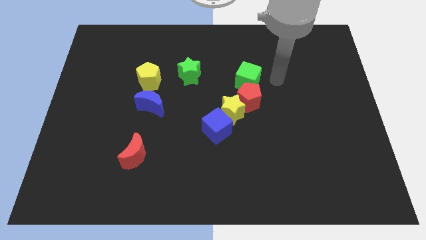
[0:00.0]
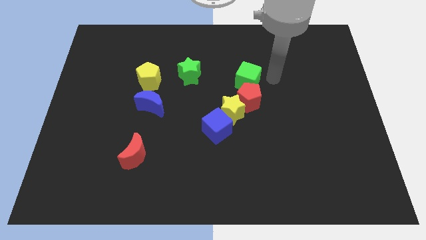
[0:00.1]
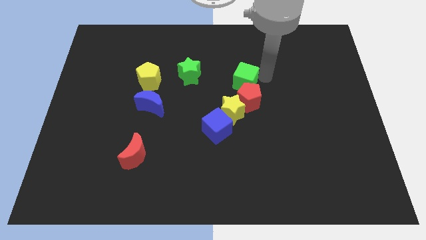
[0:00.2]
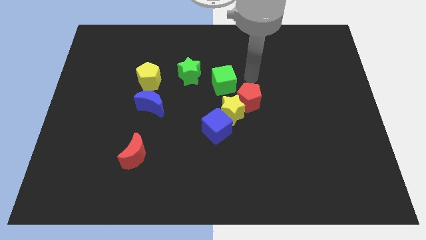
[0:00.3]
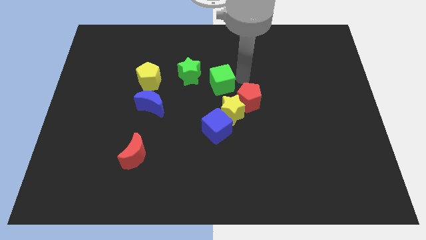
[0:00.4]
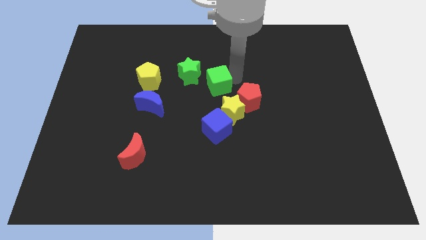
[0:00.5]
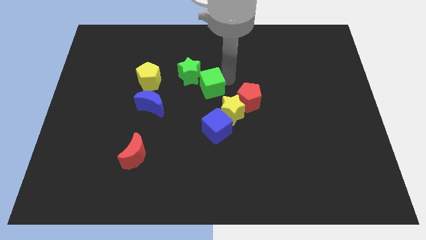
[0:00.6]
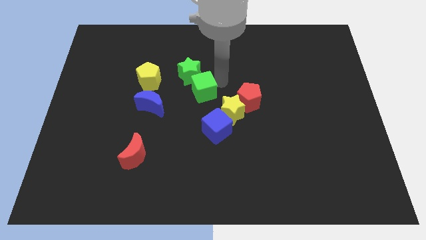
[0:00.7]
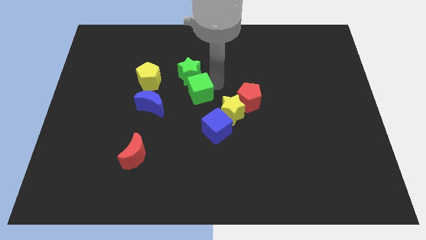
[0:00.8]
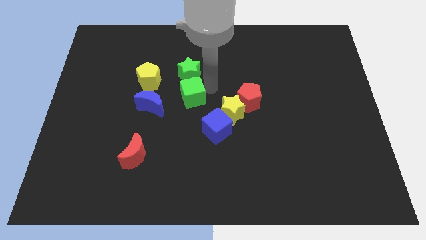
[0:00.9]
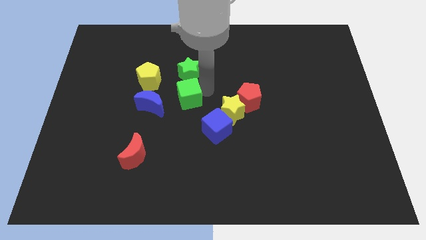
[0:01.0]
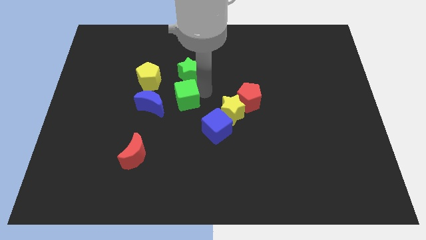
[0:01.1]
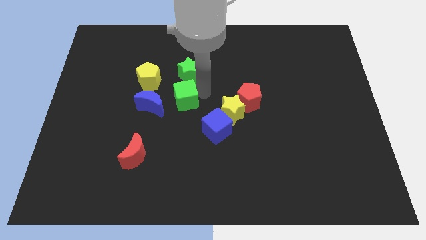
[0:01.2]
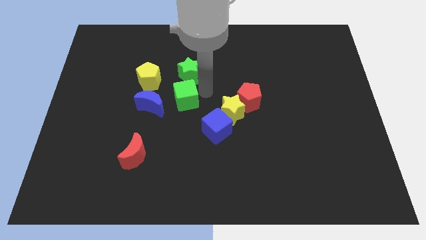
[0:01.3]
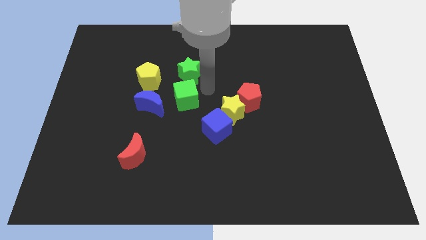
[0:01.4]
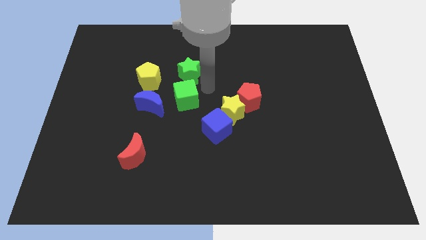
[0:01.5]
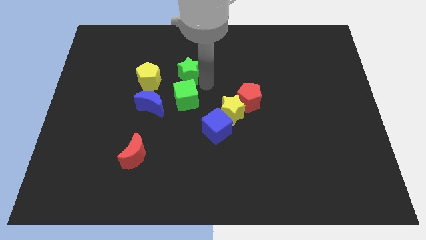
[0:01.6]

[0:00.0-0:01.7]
move the green cube below the green star

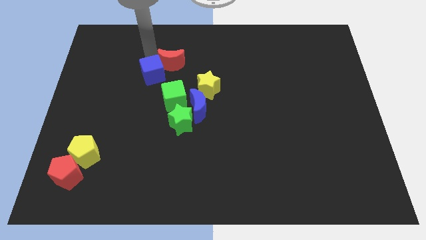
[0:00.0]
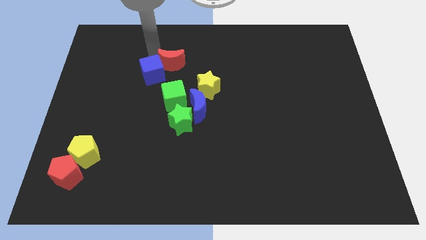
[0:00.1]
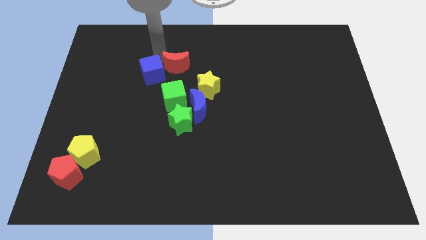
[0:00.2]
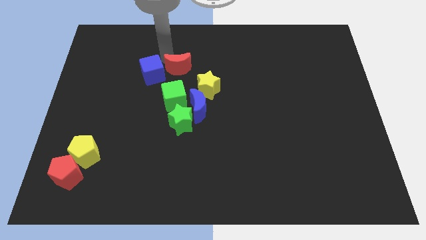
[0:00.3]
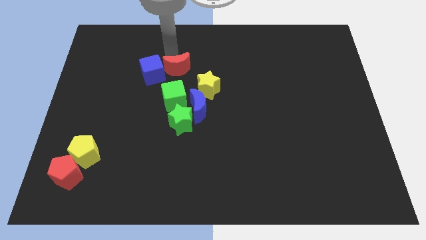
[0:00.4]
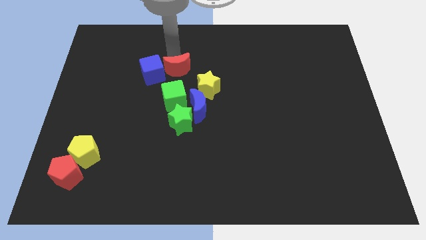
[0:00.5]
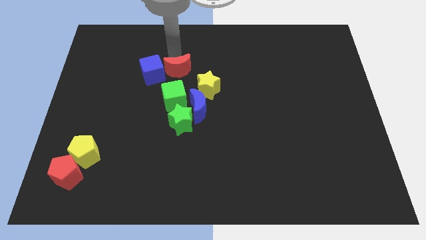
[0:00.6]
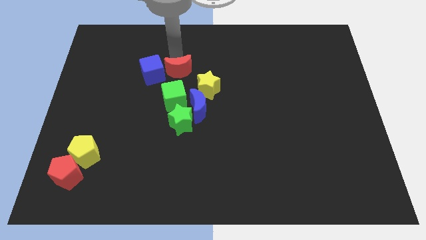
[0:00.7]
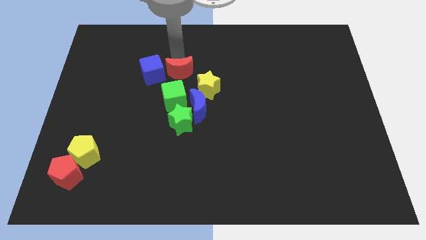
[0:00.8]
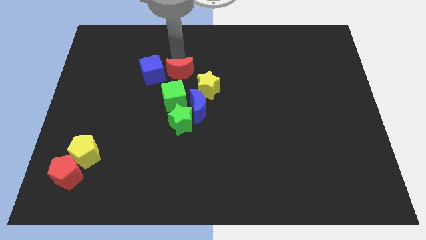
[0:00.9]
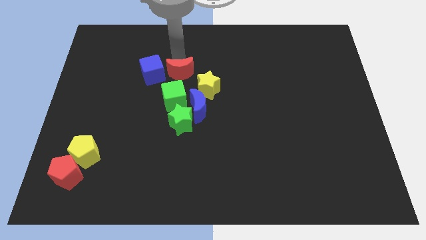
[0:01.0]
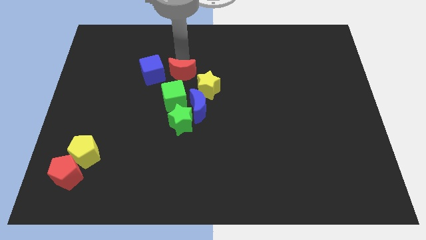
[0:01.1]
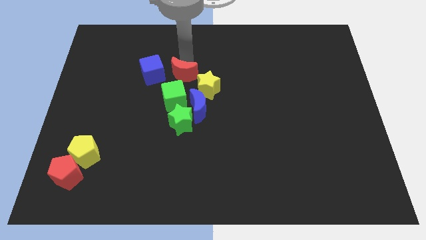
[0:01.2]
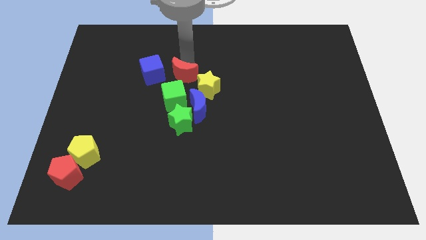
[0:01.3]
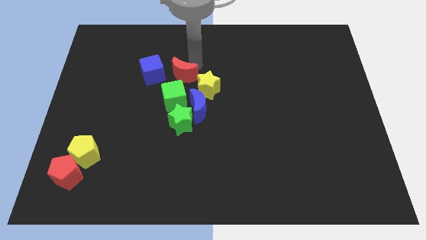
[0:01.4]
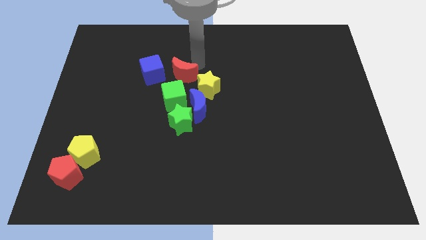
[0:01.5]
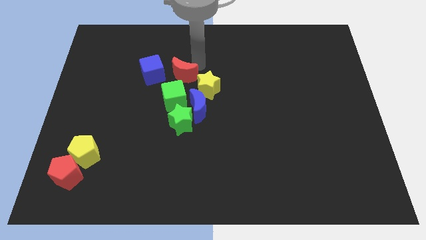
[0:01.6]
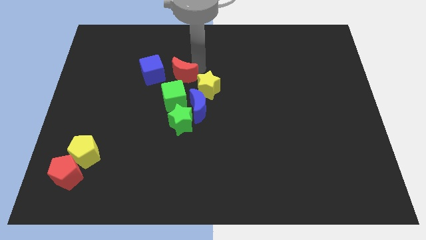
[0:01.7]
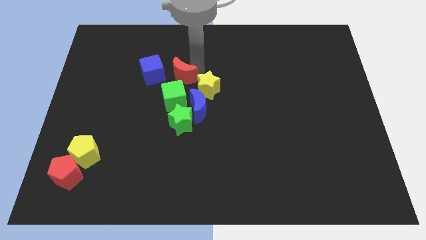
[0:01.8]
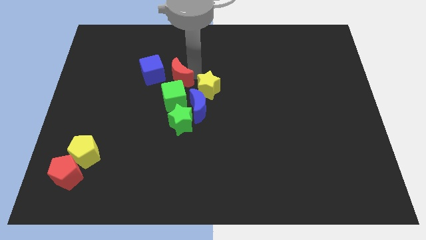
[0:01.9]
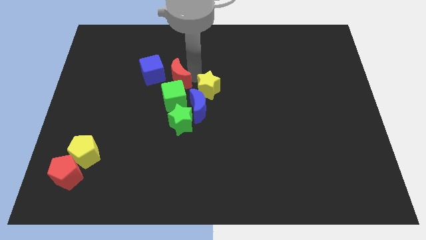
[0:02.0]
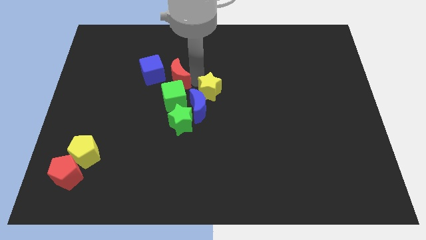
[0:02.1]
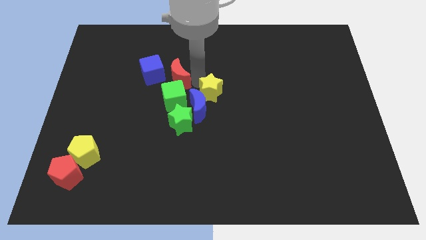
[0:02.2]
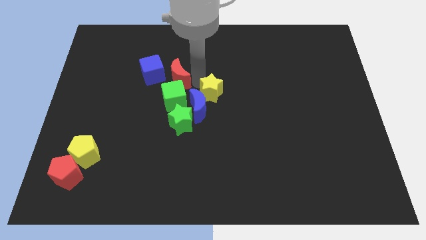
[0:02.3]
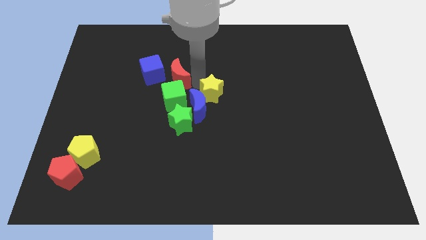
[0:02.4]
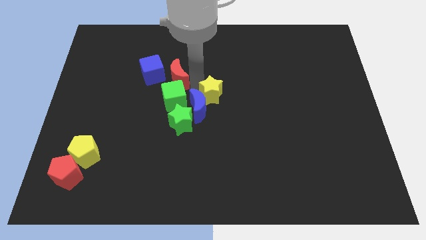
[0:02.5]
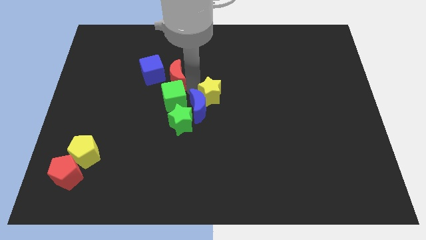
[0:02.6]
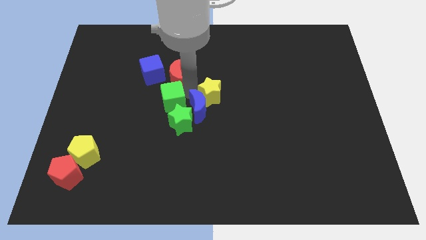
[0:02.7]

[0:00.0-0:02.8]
place your arm in between the group of blocks

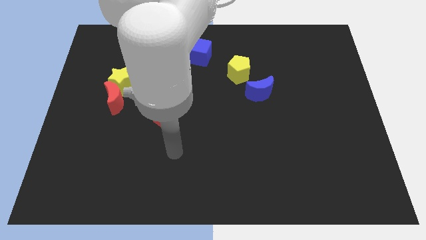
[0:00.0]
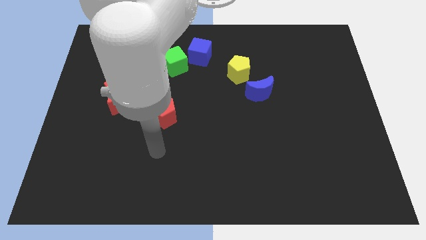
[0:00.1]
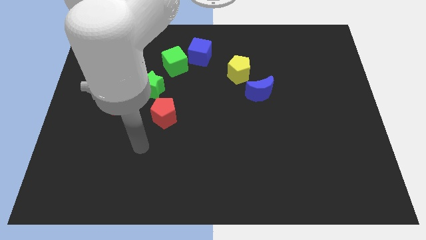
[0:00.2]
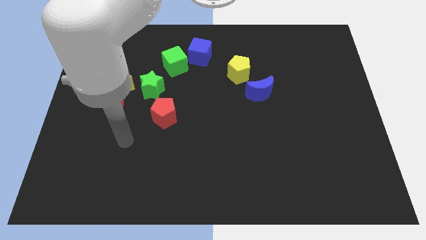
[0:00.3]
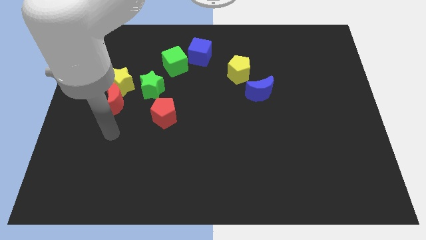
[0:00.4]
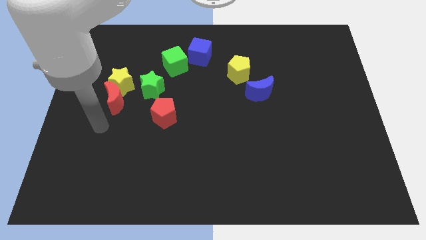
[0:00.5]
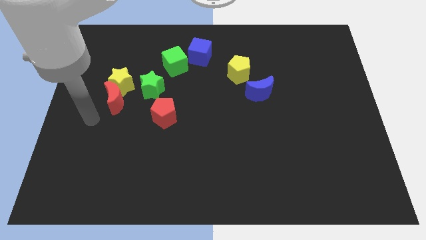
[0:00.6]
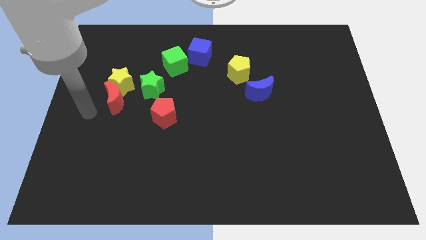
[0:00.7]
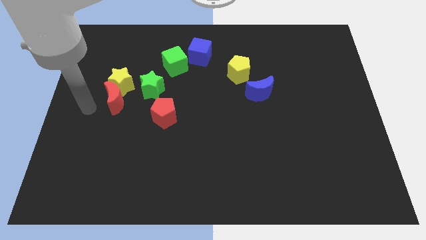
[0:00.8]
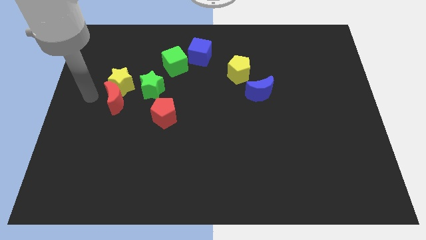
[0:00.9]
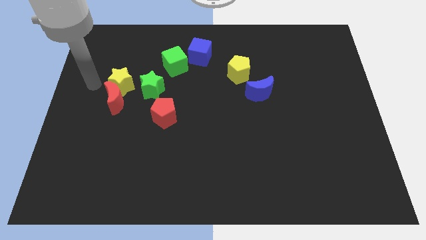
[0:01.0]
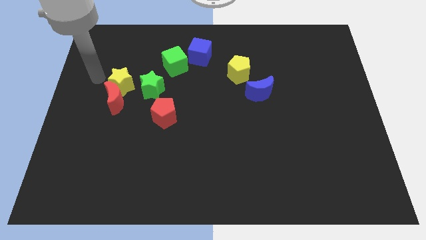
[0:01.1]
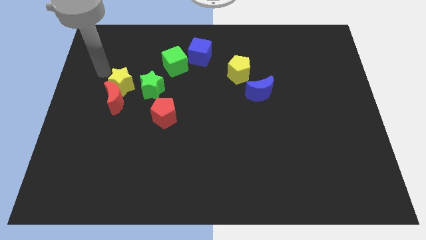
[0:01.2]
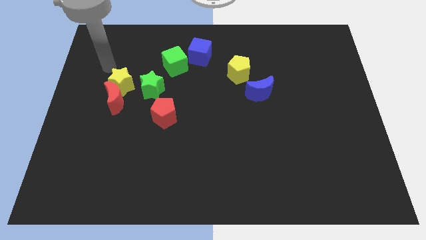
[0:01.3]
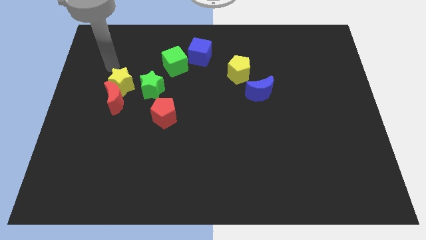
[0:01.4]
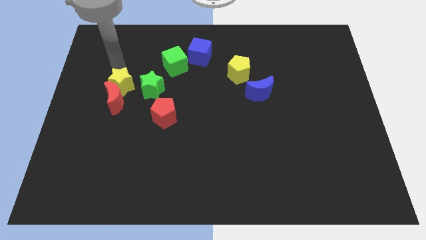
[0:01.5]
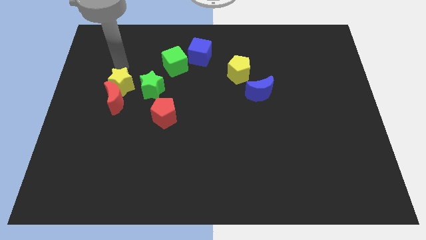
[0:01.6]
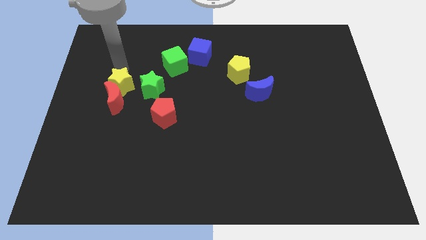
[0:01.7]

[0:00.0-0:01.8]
place the arm above the yellow star

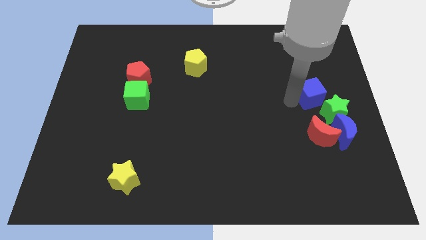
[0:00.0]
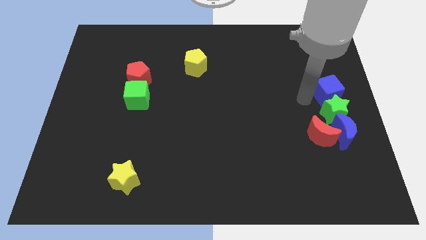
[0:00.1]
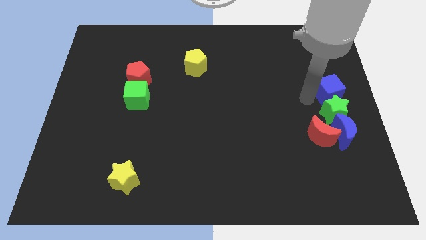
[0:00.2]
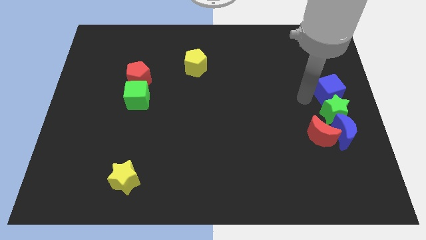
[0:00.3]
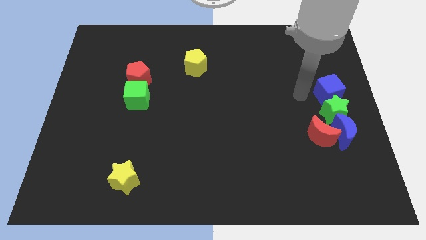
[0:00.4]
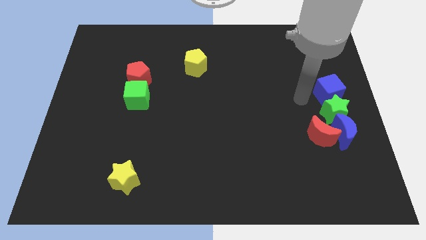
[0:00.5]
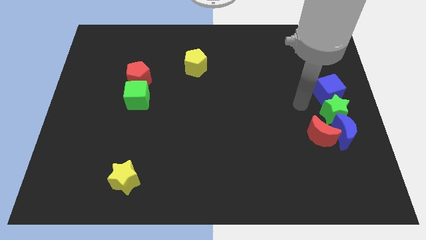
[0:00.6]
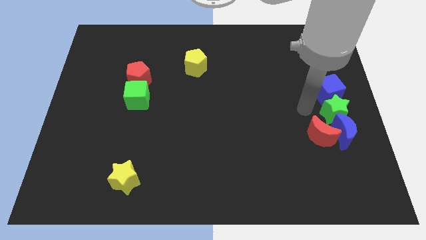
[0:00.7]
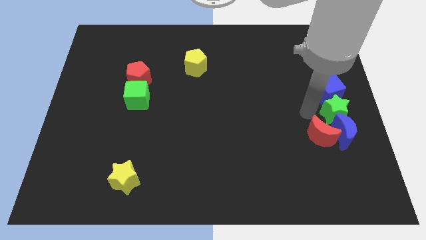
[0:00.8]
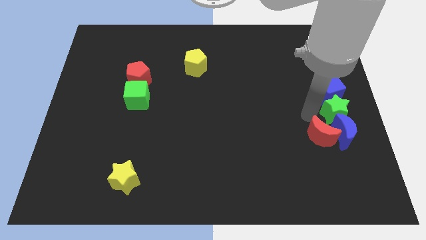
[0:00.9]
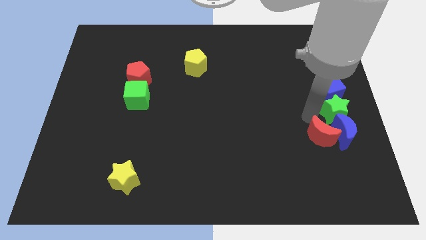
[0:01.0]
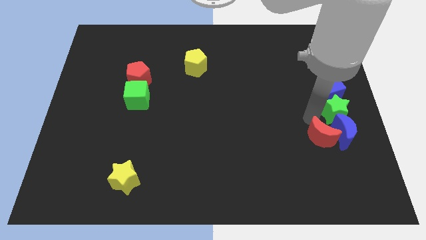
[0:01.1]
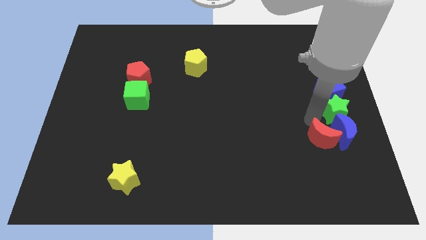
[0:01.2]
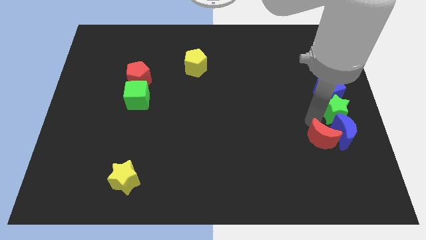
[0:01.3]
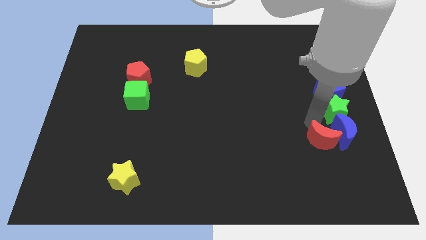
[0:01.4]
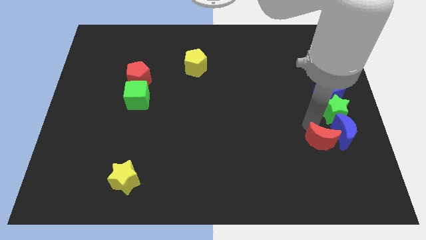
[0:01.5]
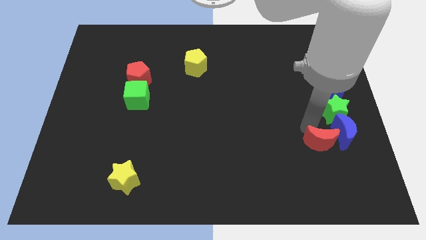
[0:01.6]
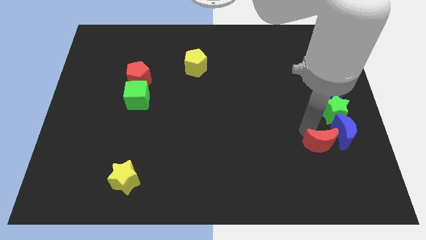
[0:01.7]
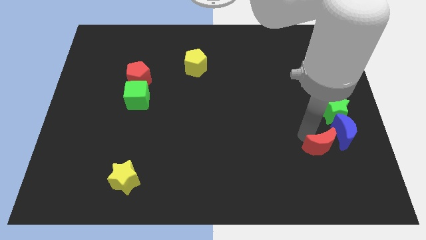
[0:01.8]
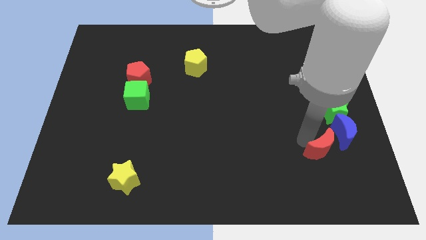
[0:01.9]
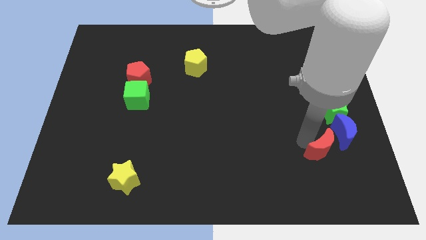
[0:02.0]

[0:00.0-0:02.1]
push red moon slightly downwards

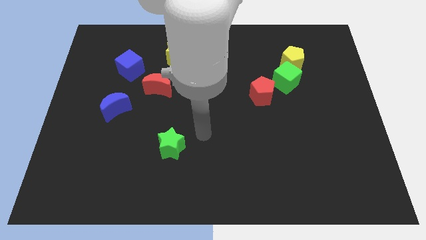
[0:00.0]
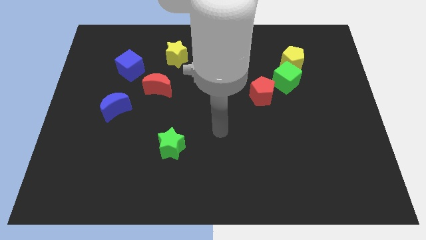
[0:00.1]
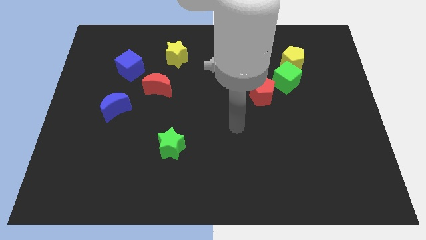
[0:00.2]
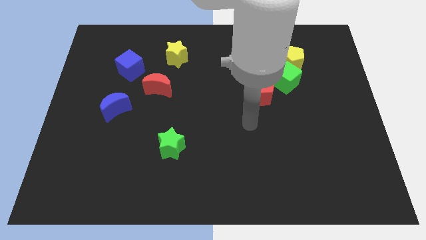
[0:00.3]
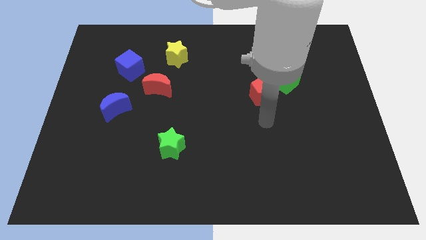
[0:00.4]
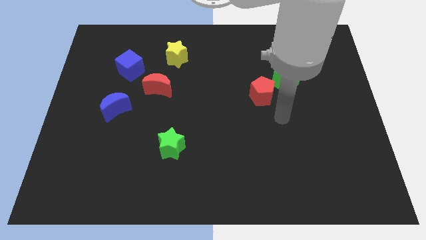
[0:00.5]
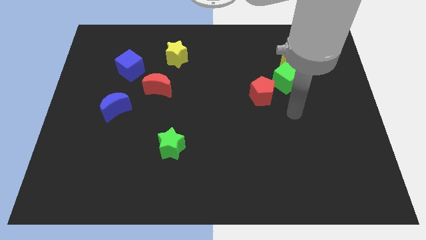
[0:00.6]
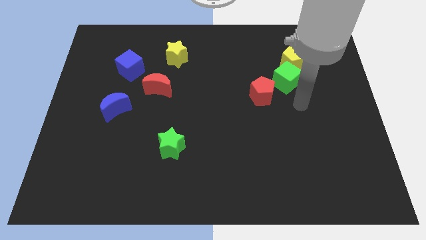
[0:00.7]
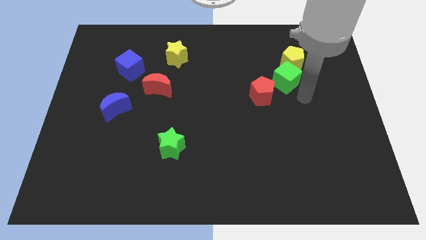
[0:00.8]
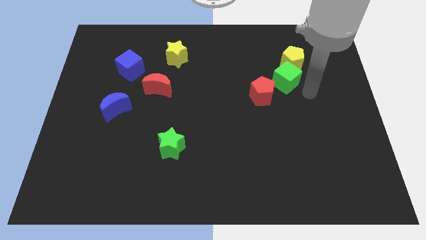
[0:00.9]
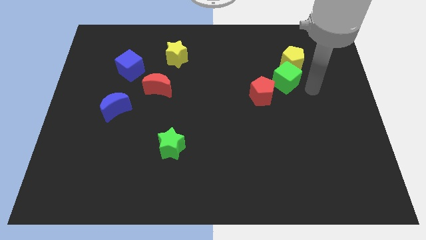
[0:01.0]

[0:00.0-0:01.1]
move your arm away from green star
